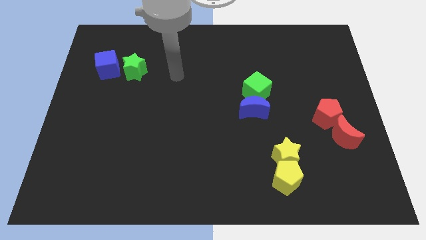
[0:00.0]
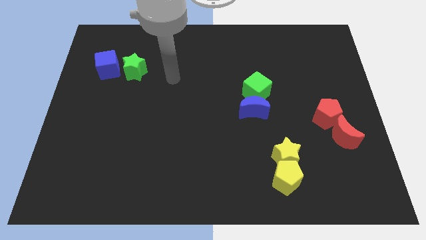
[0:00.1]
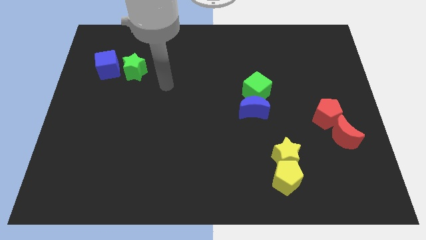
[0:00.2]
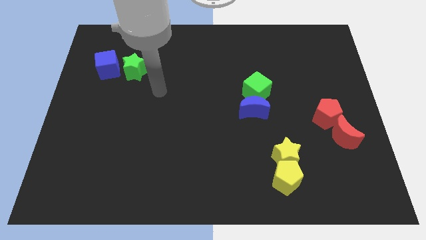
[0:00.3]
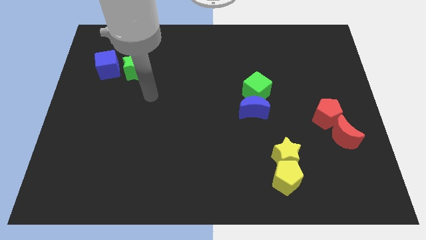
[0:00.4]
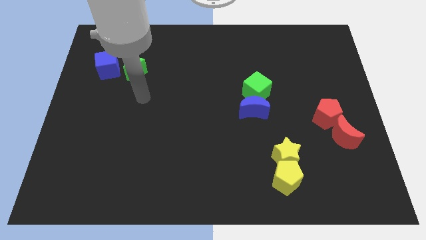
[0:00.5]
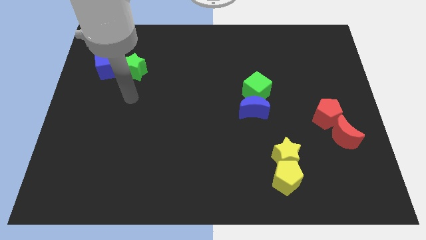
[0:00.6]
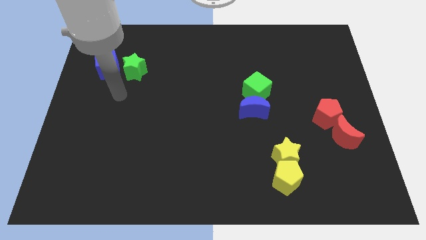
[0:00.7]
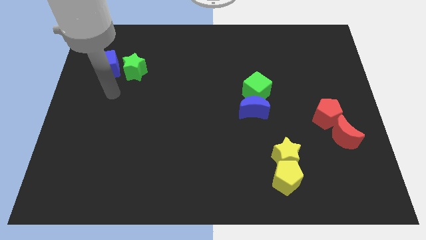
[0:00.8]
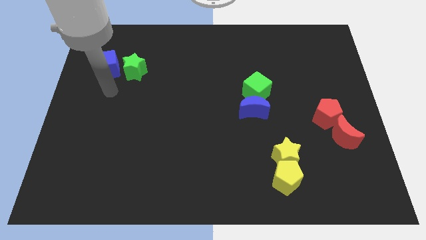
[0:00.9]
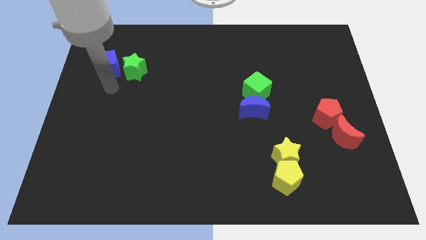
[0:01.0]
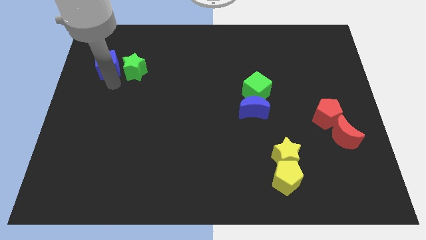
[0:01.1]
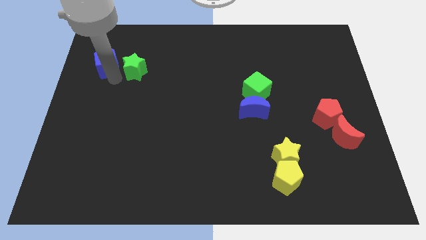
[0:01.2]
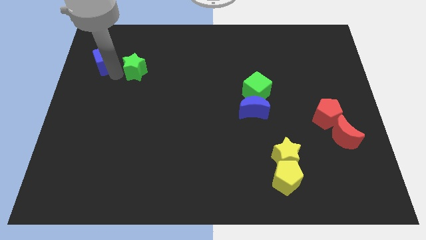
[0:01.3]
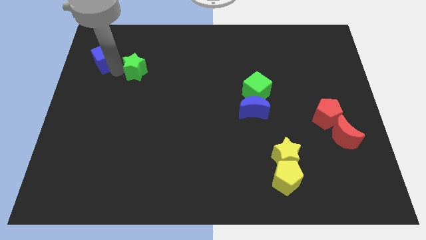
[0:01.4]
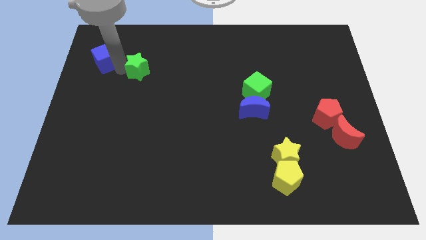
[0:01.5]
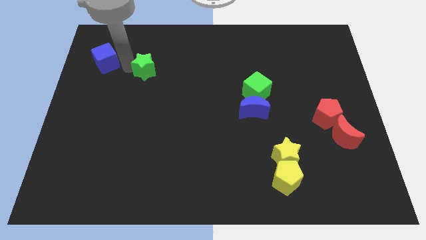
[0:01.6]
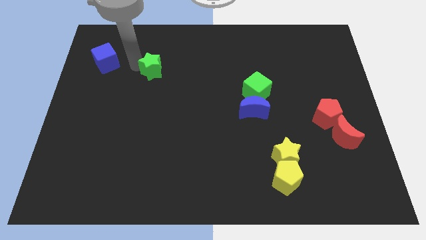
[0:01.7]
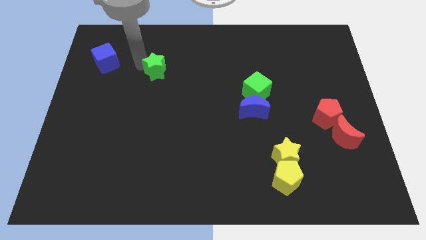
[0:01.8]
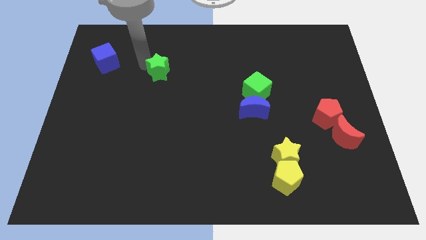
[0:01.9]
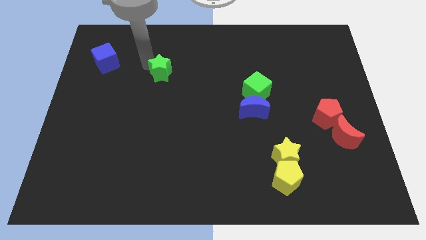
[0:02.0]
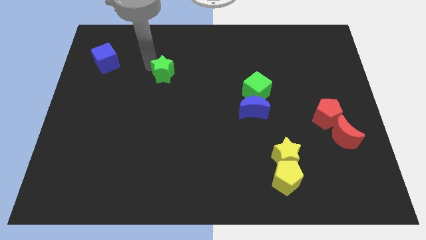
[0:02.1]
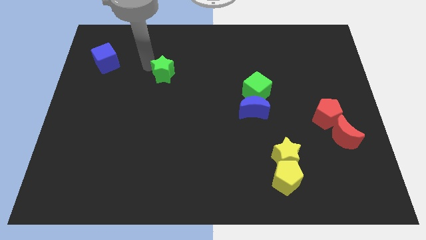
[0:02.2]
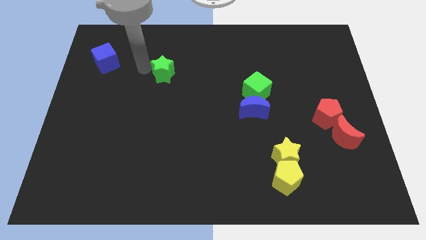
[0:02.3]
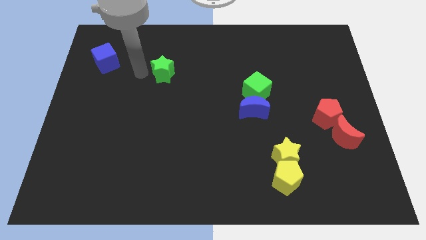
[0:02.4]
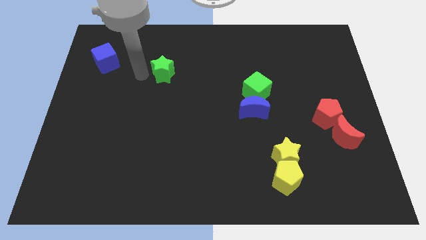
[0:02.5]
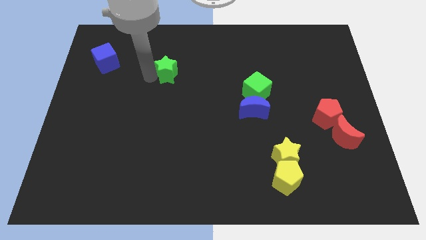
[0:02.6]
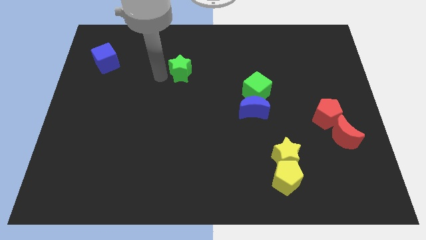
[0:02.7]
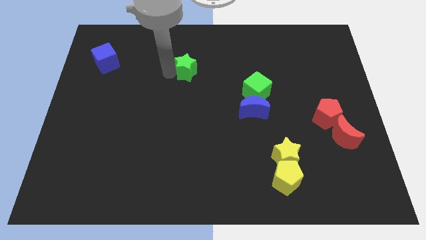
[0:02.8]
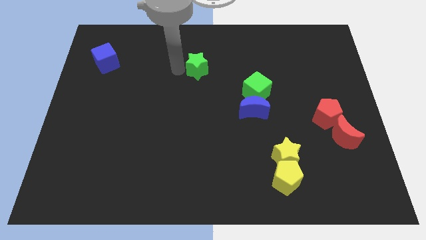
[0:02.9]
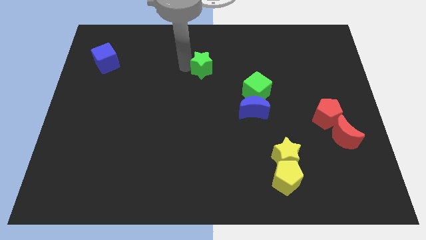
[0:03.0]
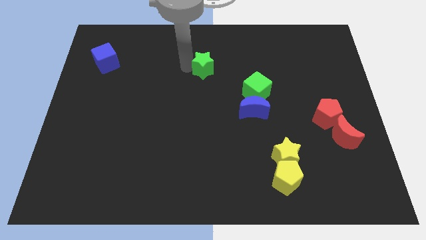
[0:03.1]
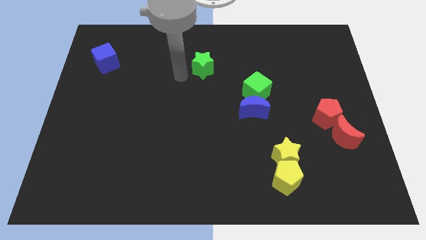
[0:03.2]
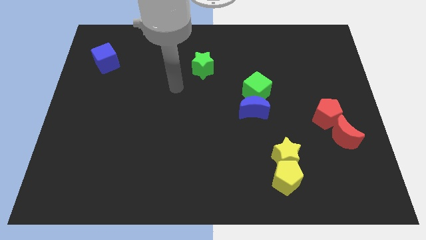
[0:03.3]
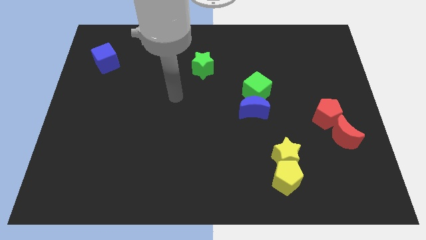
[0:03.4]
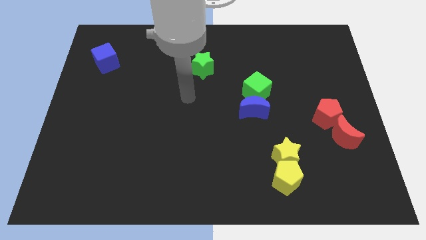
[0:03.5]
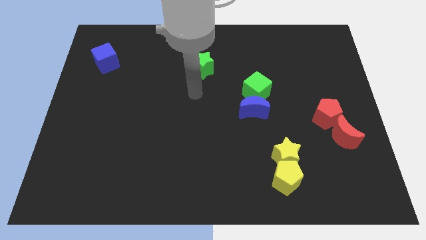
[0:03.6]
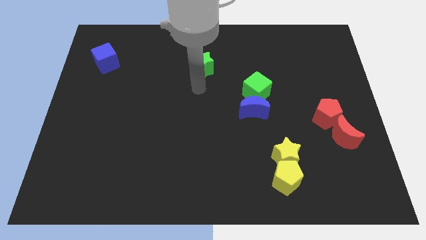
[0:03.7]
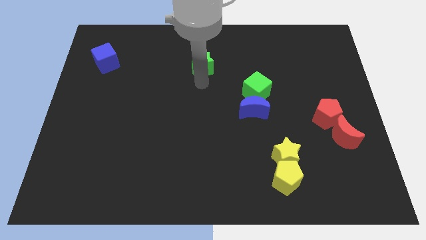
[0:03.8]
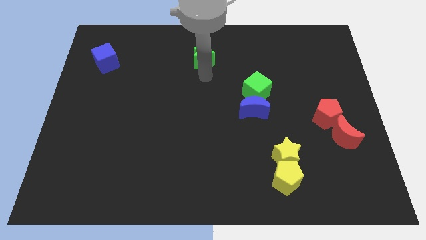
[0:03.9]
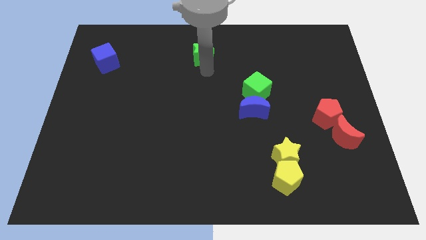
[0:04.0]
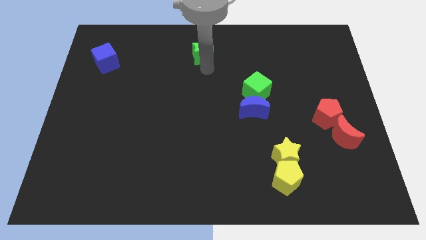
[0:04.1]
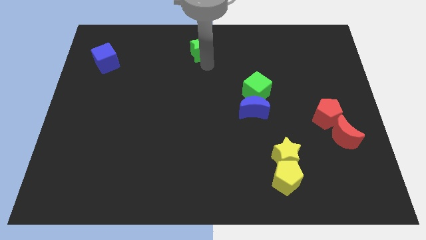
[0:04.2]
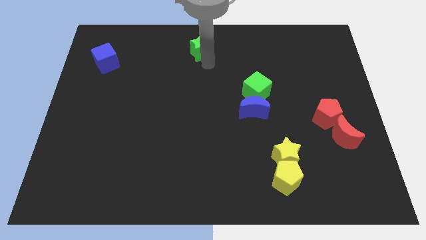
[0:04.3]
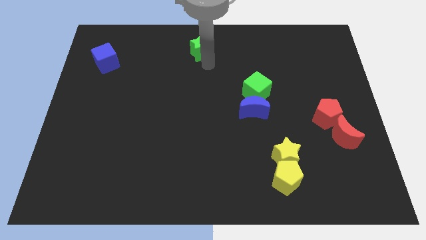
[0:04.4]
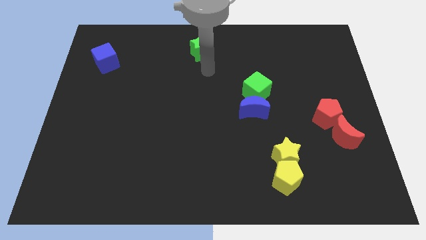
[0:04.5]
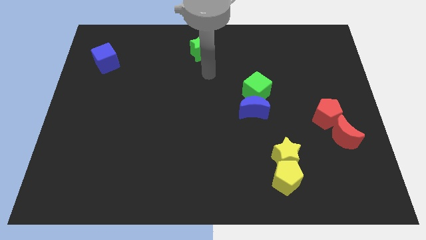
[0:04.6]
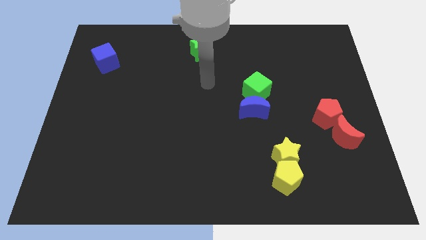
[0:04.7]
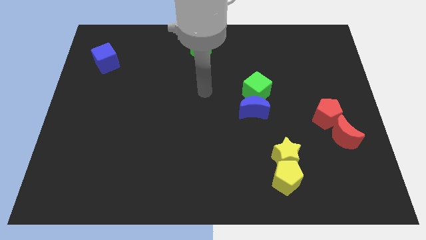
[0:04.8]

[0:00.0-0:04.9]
push the green star towards the top center

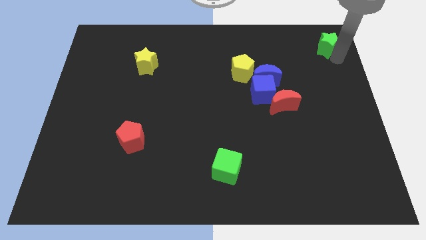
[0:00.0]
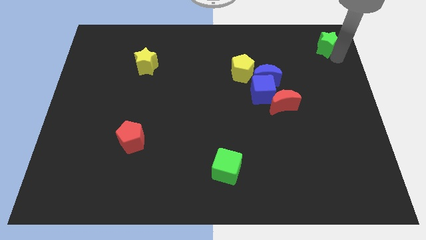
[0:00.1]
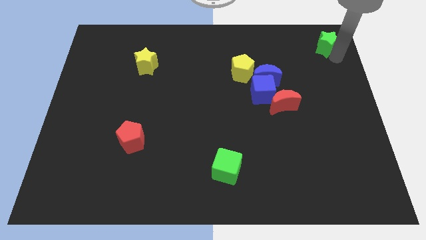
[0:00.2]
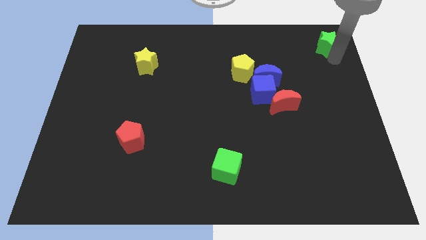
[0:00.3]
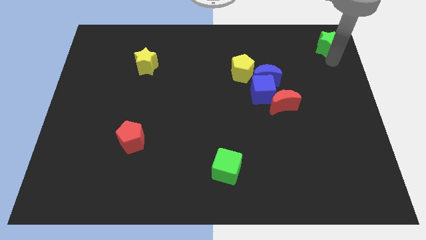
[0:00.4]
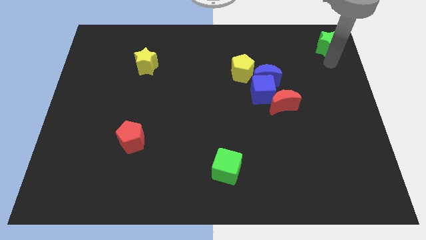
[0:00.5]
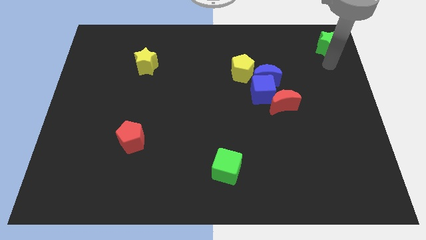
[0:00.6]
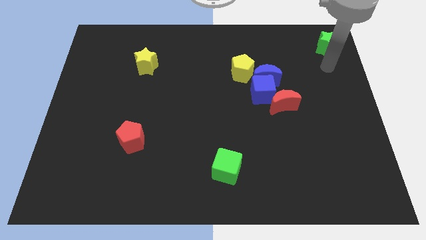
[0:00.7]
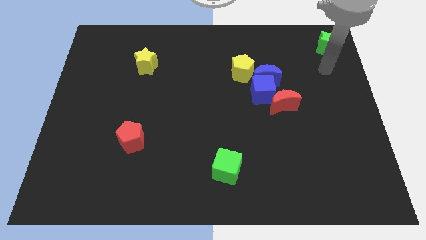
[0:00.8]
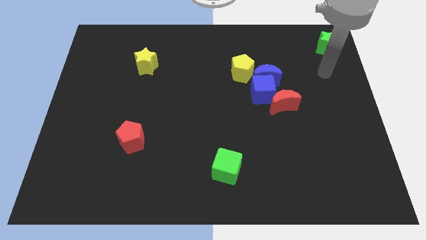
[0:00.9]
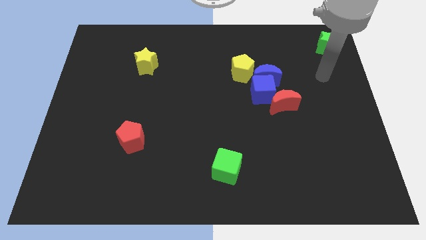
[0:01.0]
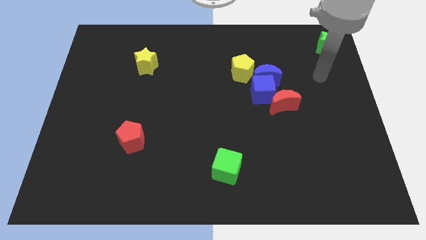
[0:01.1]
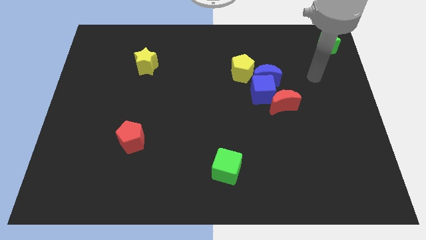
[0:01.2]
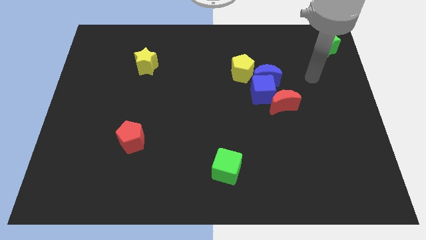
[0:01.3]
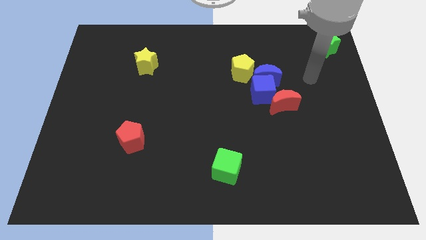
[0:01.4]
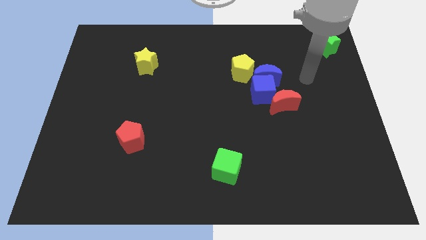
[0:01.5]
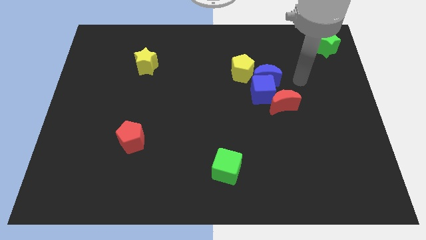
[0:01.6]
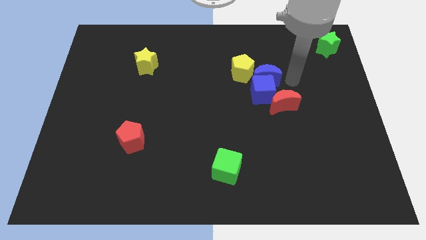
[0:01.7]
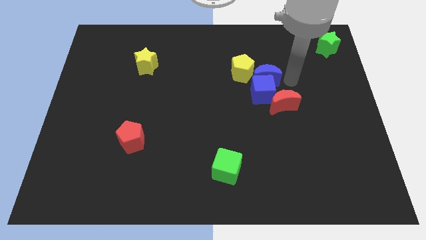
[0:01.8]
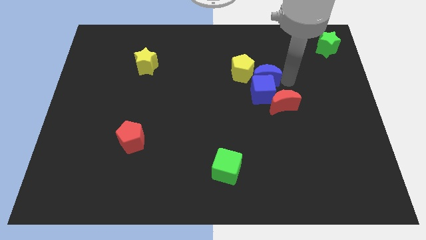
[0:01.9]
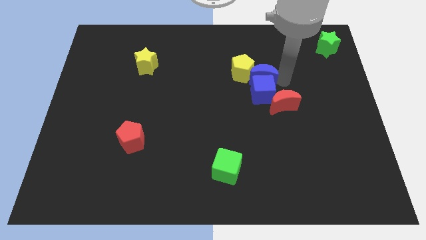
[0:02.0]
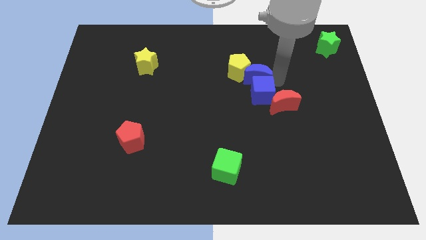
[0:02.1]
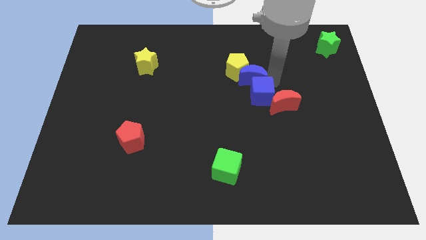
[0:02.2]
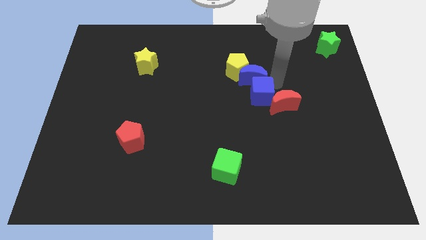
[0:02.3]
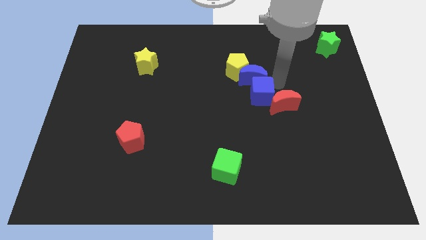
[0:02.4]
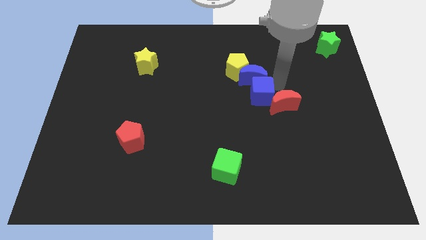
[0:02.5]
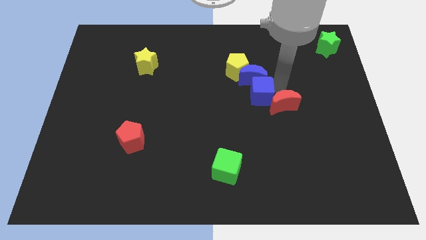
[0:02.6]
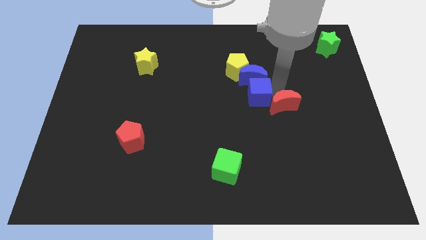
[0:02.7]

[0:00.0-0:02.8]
adjust the blue moon to the center of the yellow pentagon and blue cube

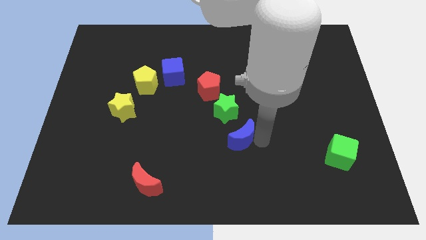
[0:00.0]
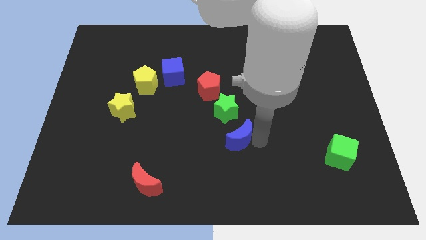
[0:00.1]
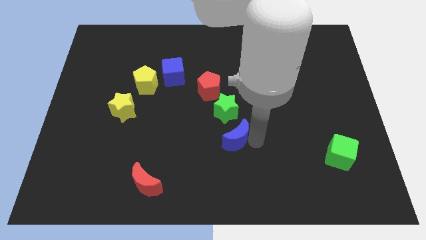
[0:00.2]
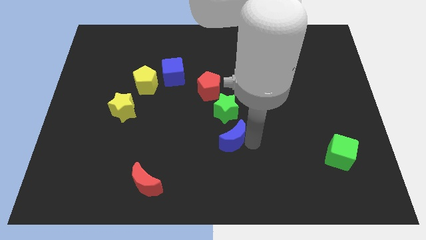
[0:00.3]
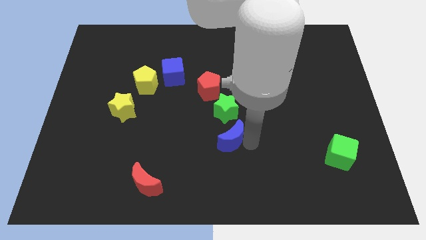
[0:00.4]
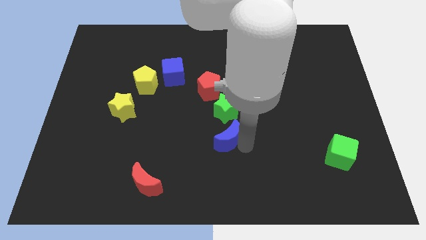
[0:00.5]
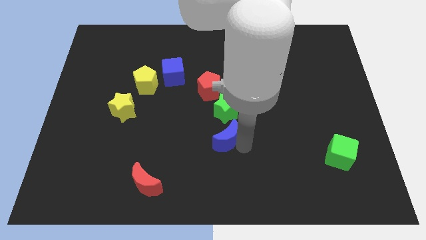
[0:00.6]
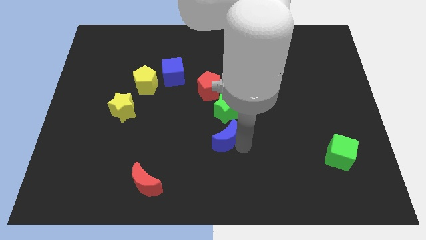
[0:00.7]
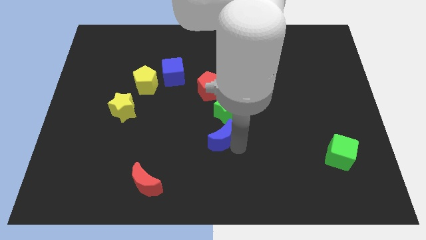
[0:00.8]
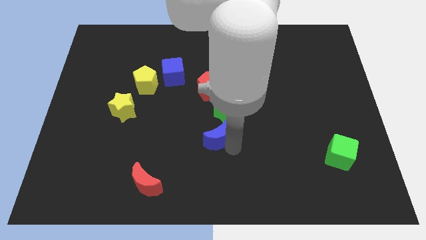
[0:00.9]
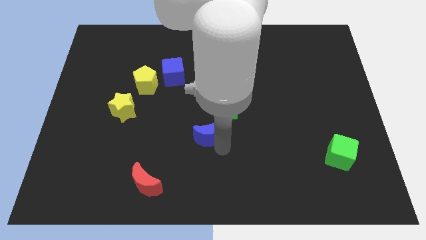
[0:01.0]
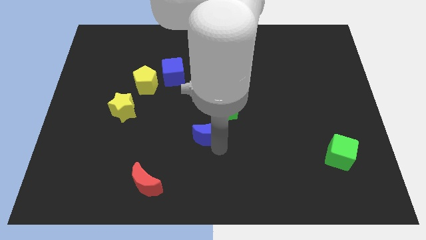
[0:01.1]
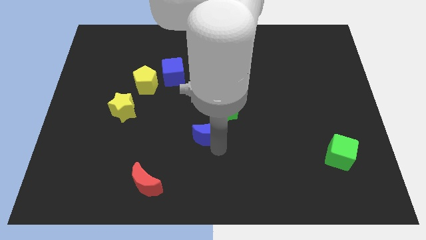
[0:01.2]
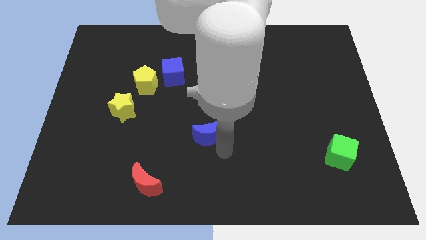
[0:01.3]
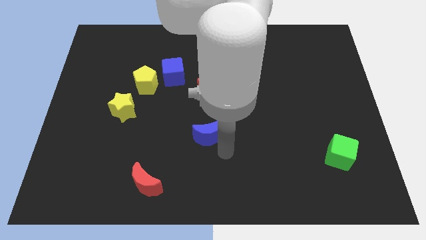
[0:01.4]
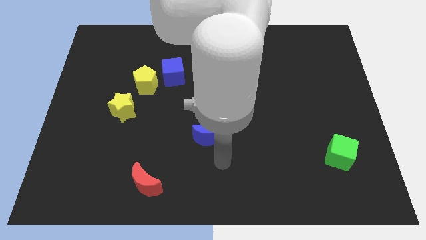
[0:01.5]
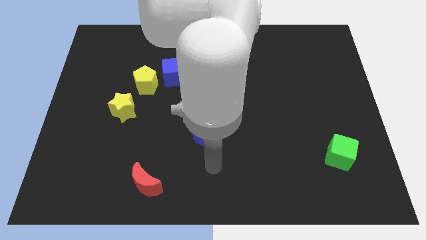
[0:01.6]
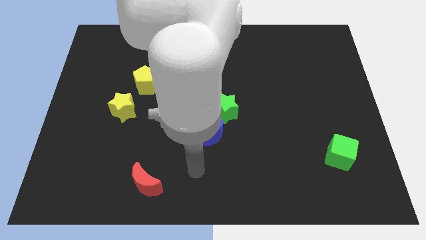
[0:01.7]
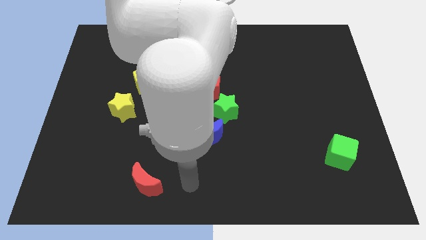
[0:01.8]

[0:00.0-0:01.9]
adjust the blue crescent below green star
